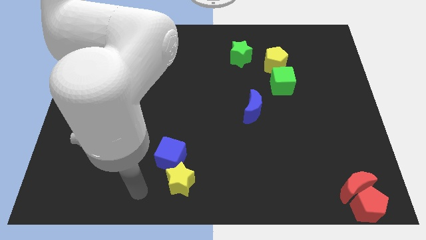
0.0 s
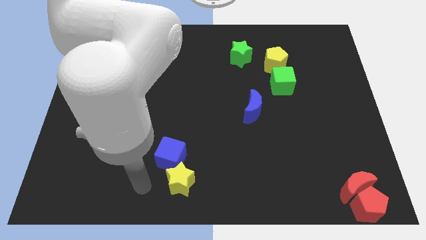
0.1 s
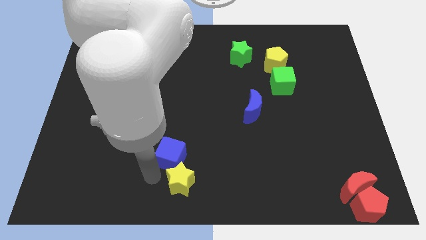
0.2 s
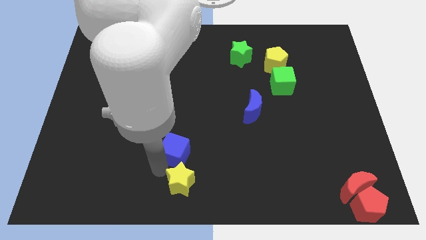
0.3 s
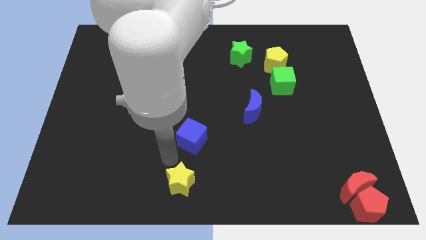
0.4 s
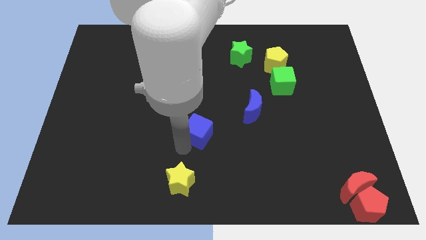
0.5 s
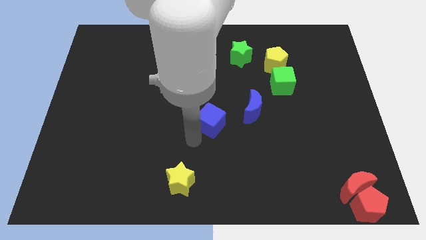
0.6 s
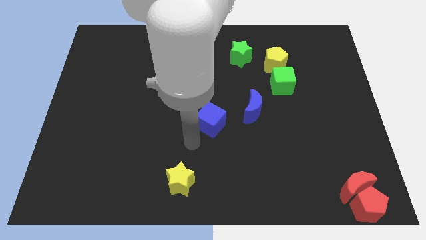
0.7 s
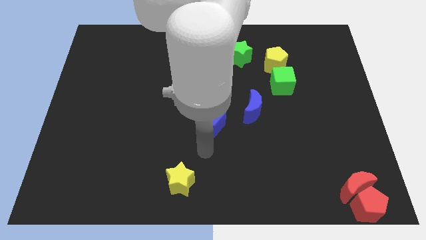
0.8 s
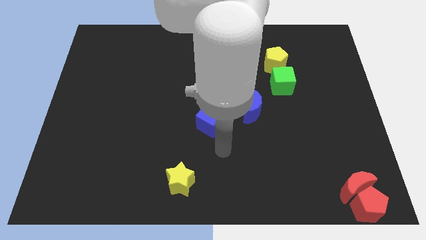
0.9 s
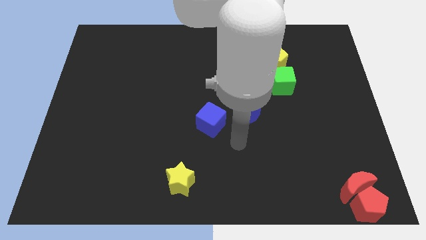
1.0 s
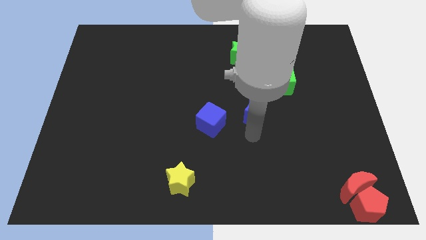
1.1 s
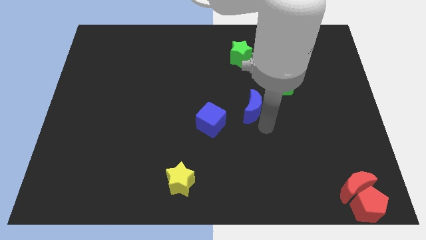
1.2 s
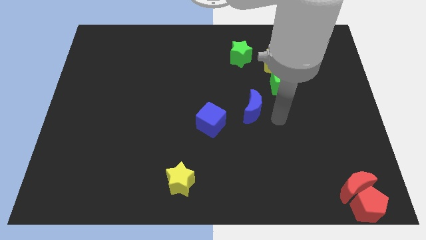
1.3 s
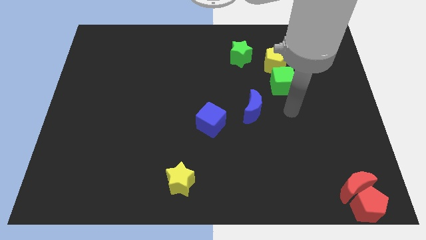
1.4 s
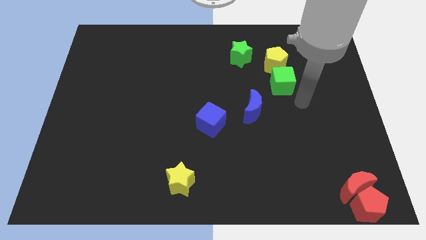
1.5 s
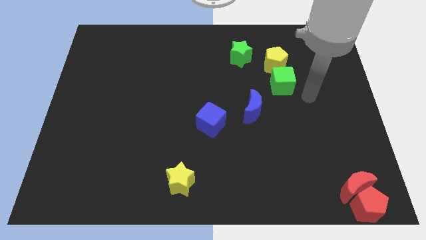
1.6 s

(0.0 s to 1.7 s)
place the blue cube diagonally to the top right of the blue moon

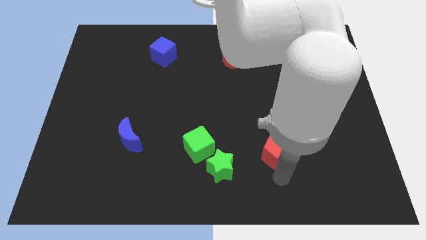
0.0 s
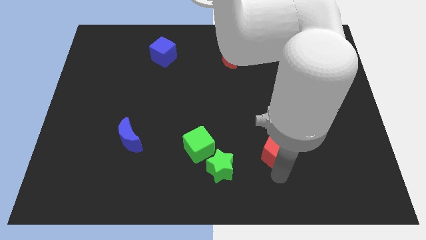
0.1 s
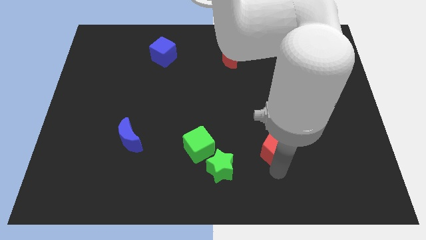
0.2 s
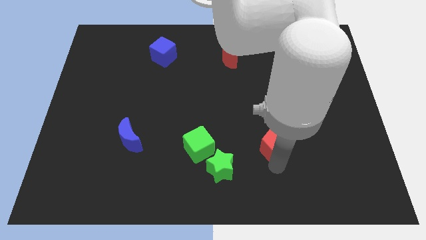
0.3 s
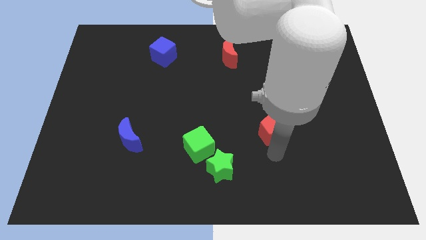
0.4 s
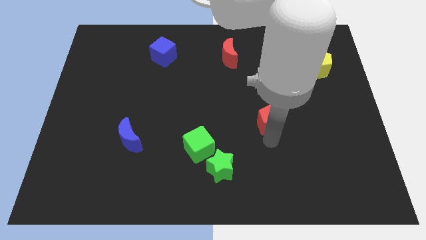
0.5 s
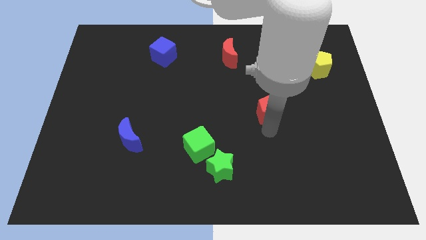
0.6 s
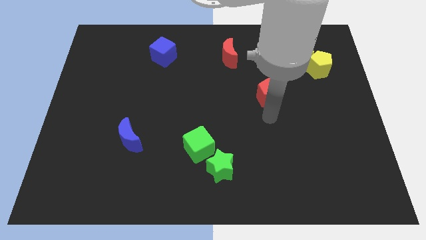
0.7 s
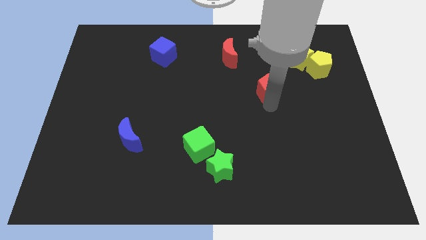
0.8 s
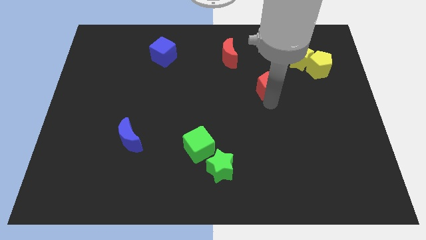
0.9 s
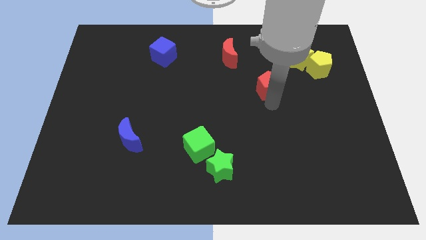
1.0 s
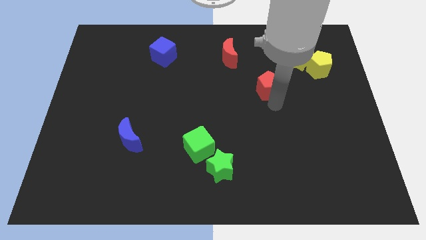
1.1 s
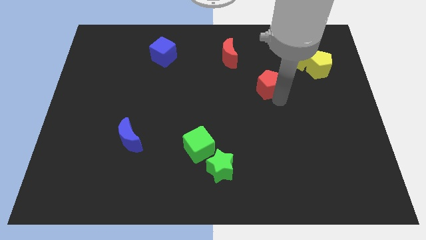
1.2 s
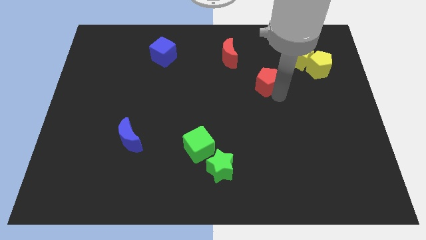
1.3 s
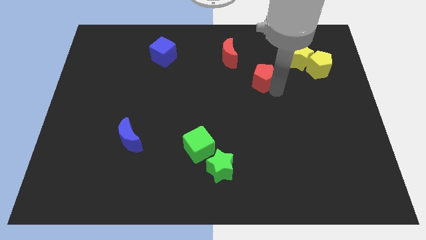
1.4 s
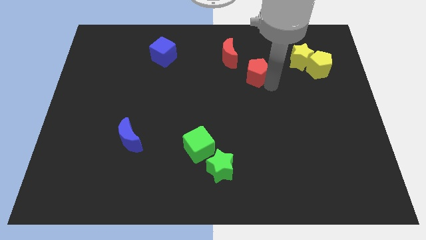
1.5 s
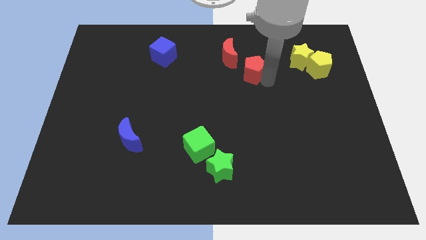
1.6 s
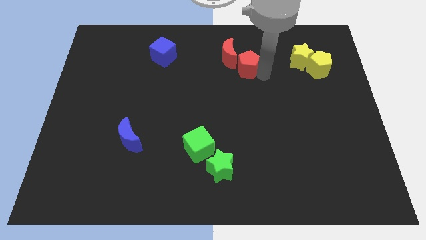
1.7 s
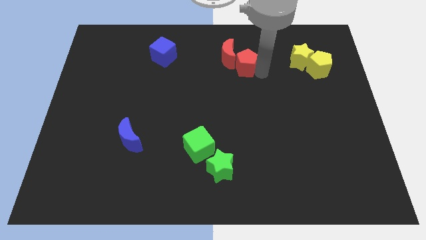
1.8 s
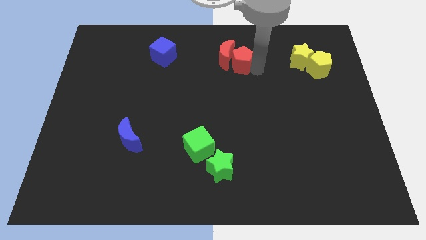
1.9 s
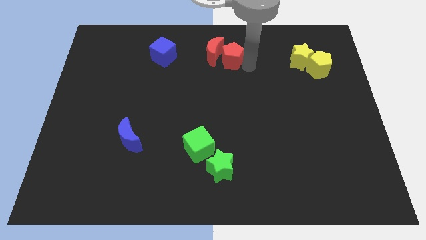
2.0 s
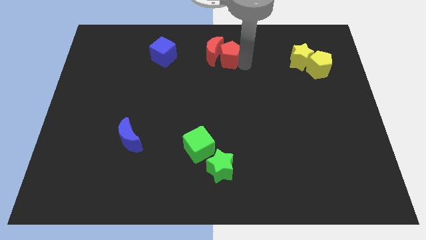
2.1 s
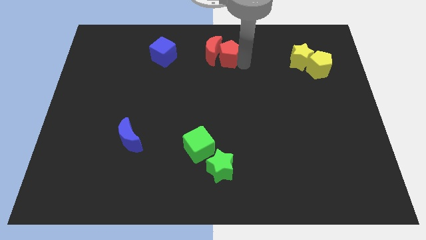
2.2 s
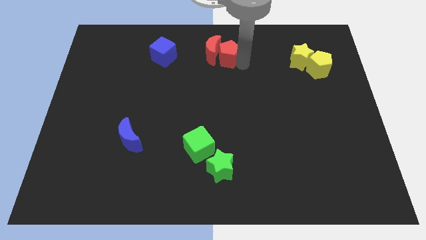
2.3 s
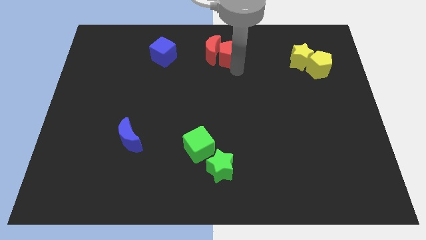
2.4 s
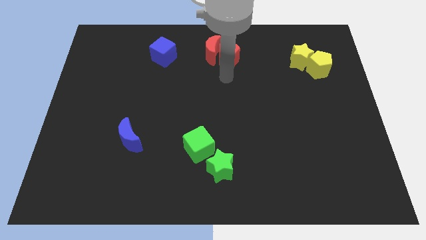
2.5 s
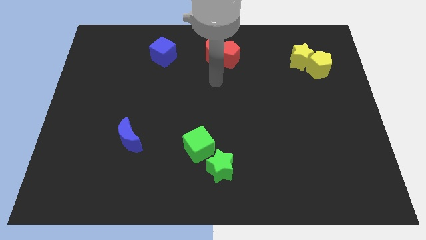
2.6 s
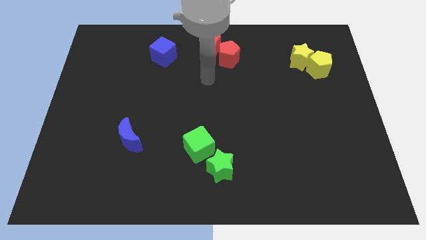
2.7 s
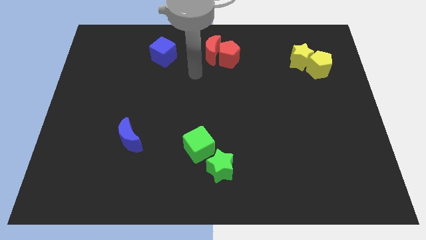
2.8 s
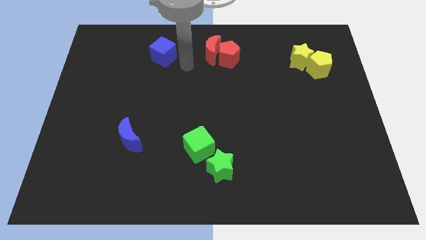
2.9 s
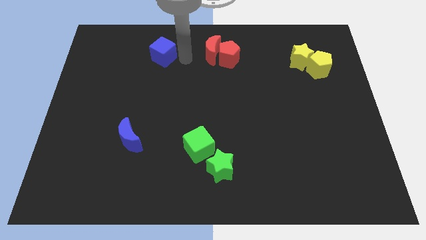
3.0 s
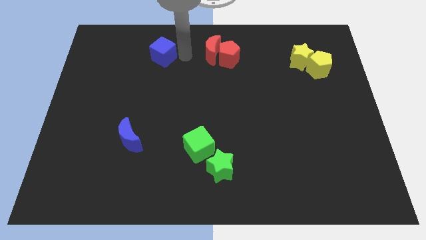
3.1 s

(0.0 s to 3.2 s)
push the red pentagon close to the red crescent

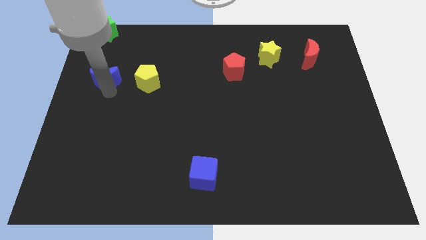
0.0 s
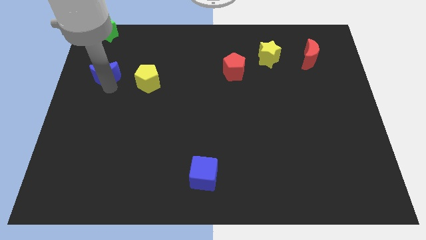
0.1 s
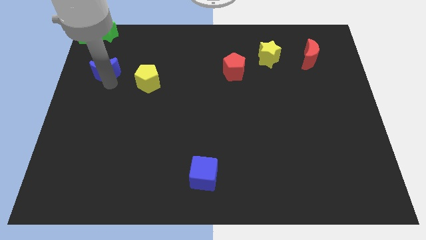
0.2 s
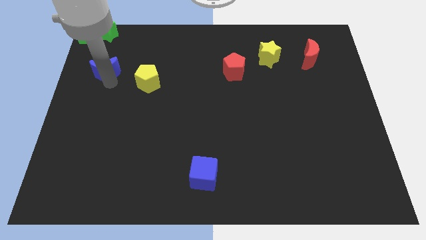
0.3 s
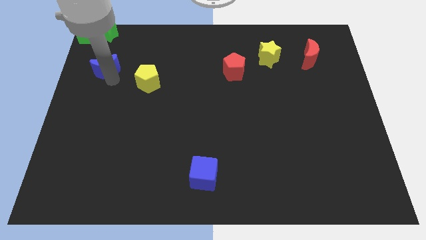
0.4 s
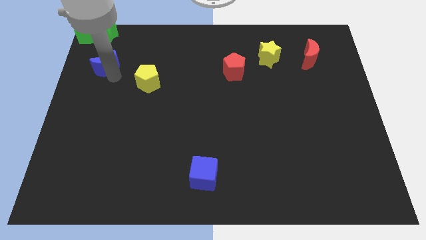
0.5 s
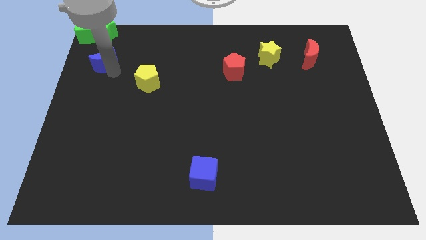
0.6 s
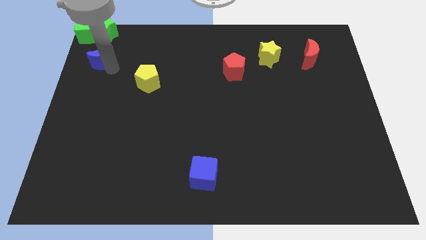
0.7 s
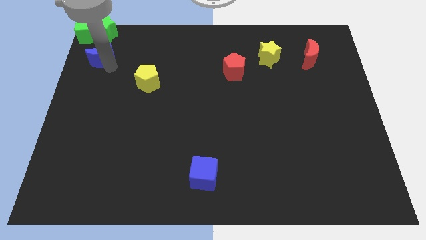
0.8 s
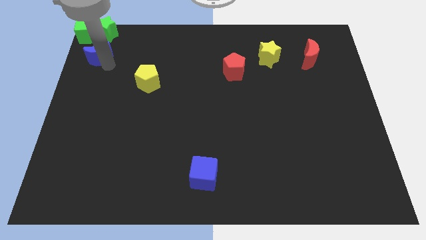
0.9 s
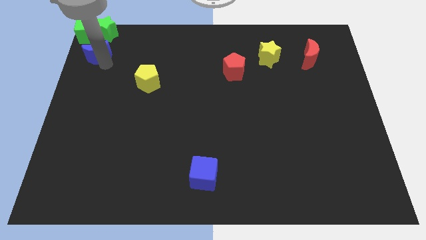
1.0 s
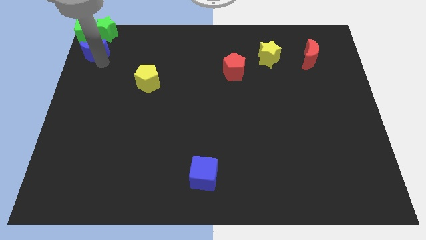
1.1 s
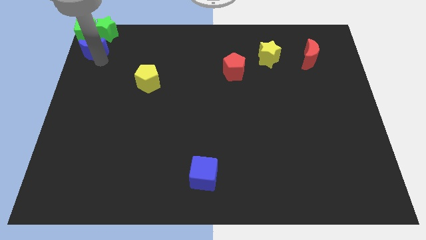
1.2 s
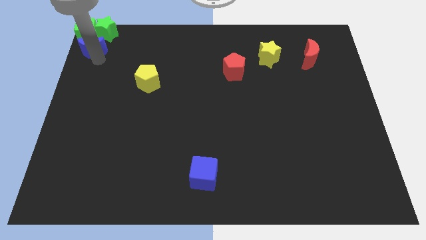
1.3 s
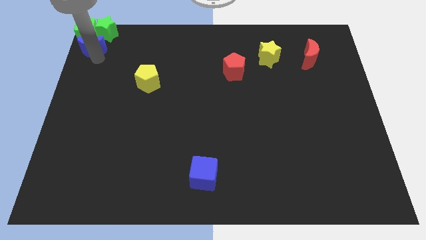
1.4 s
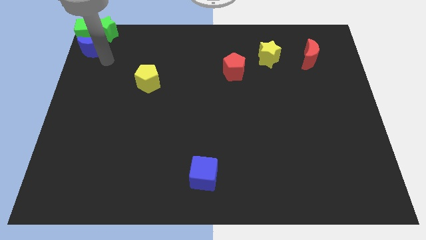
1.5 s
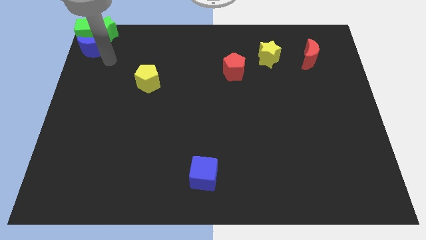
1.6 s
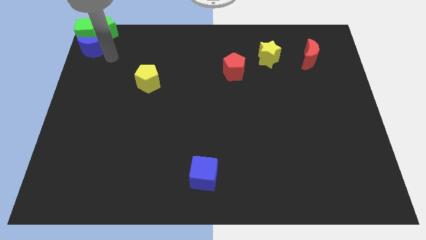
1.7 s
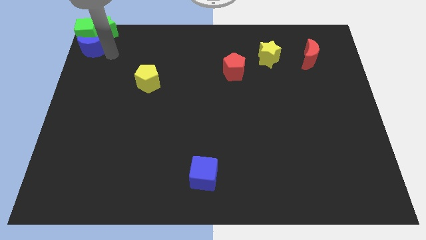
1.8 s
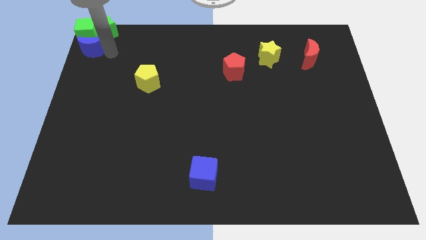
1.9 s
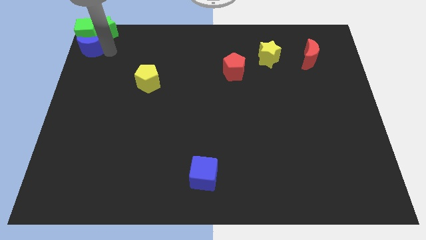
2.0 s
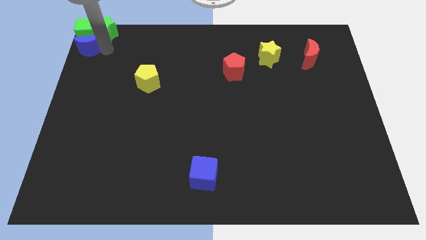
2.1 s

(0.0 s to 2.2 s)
add blue moon into green blocks

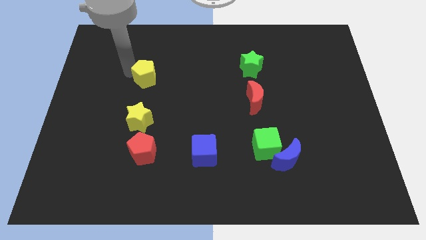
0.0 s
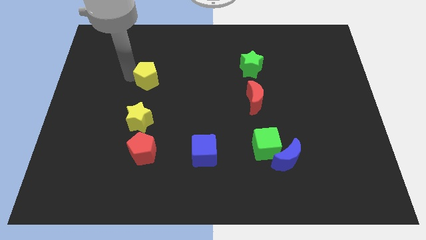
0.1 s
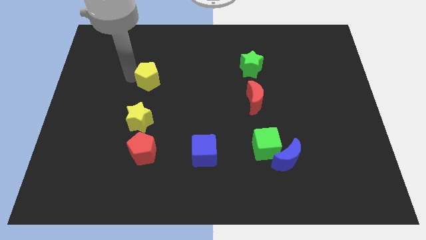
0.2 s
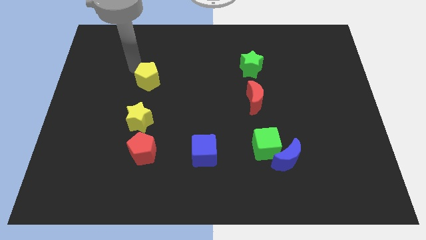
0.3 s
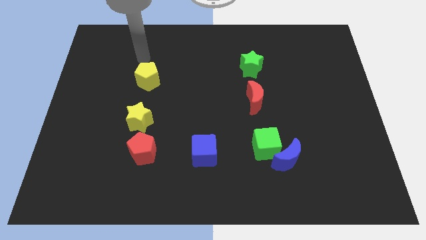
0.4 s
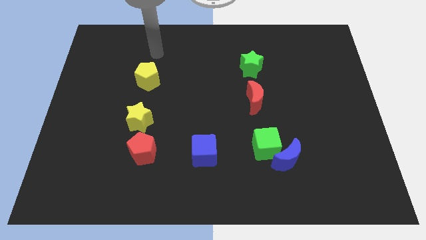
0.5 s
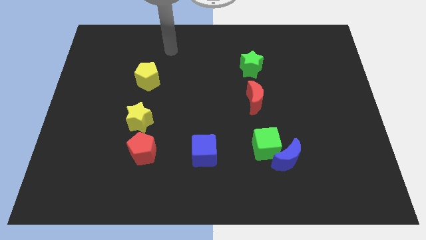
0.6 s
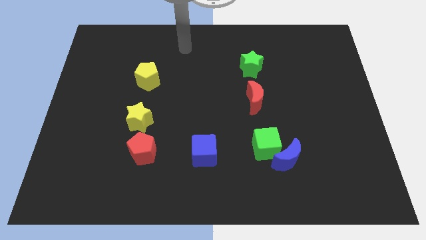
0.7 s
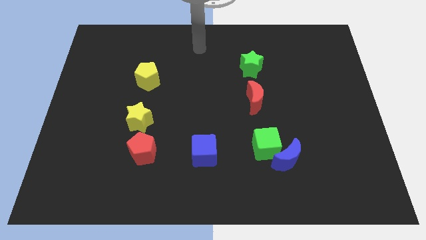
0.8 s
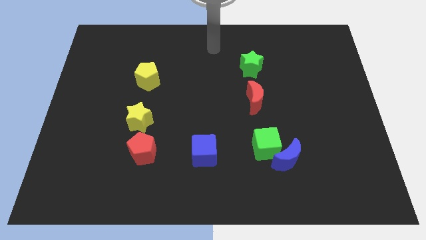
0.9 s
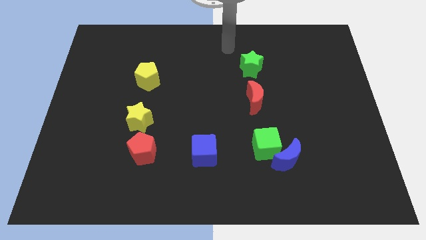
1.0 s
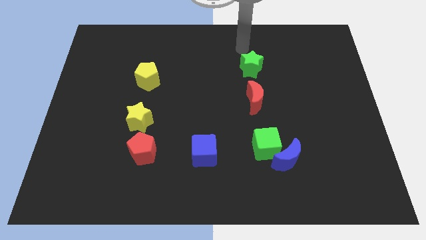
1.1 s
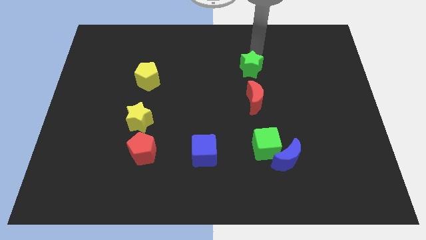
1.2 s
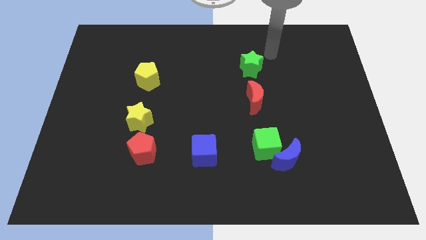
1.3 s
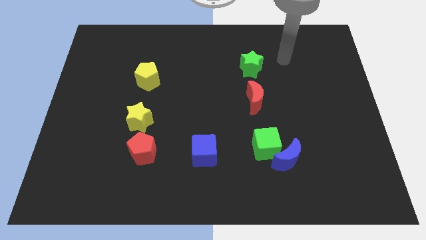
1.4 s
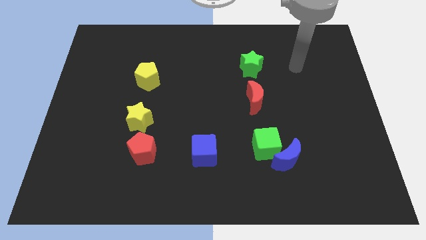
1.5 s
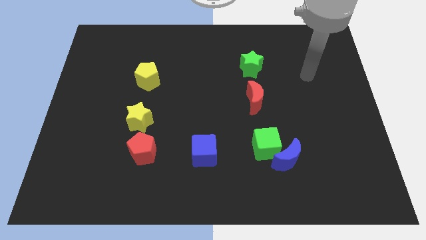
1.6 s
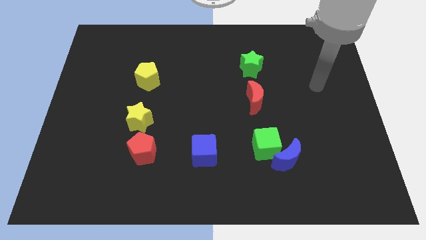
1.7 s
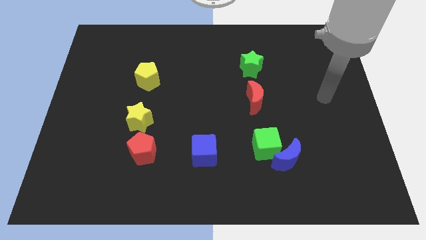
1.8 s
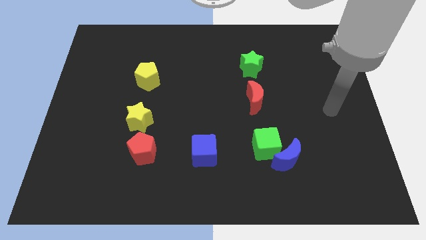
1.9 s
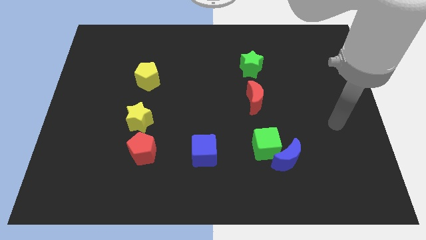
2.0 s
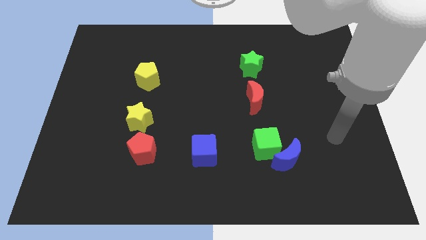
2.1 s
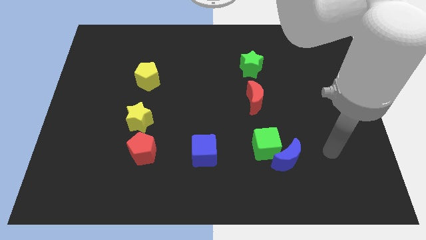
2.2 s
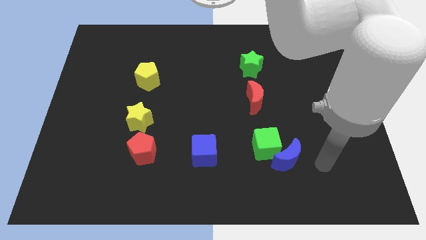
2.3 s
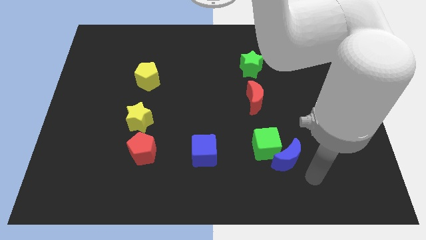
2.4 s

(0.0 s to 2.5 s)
move your arm towards blue moon
